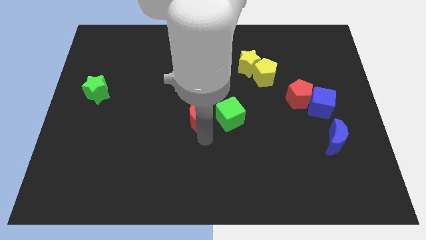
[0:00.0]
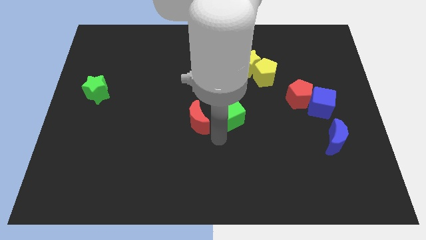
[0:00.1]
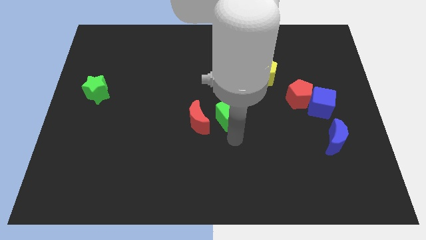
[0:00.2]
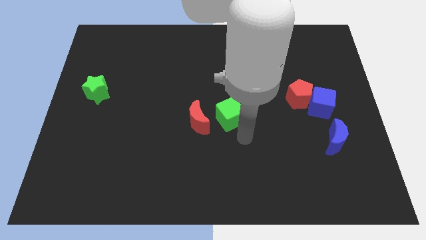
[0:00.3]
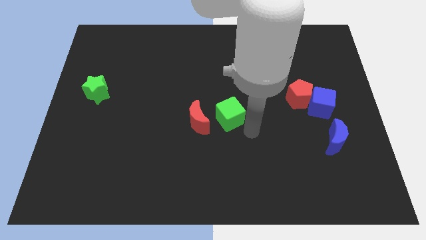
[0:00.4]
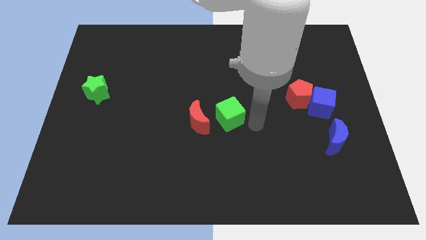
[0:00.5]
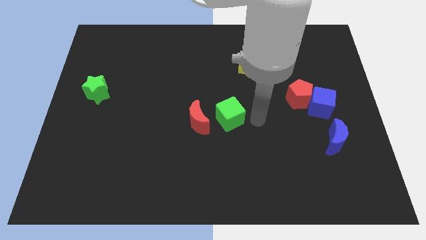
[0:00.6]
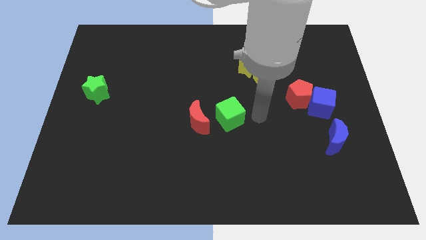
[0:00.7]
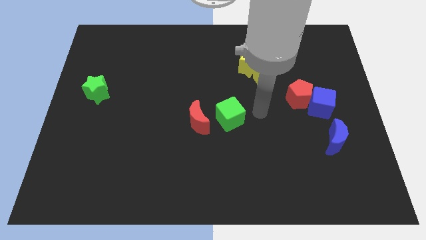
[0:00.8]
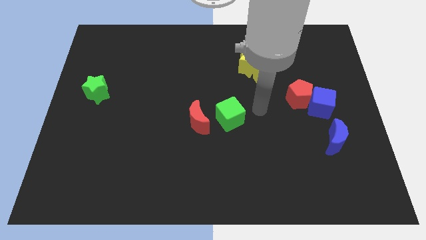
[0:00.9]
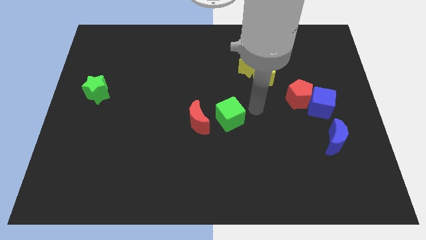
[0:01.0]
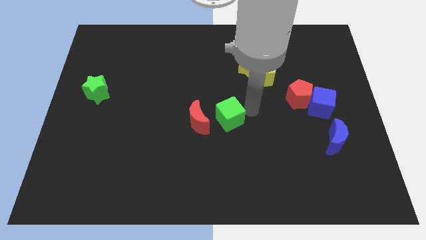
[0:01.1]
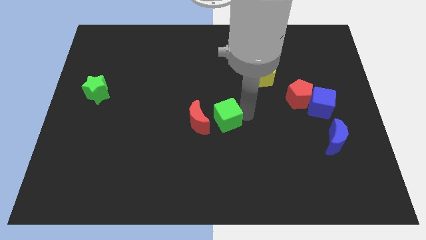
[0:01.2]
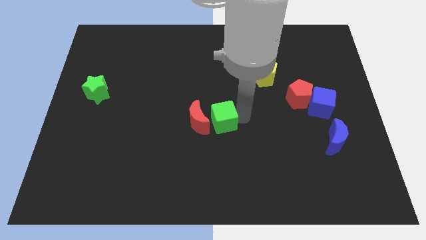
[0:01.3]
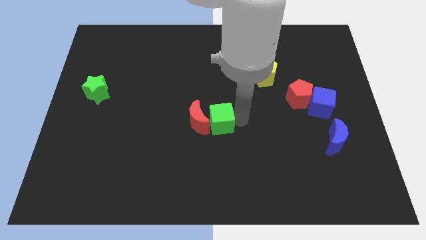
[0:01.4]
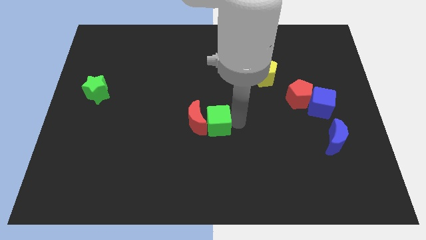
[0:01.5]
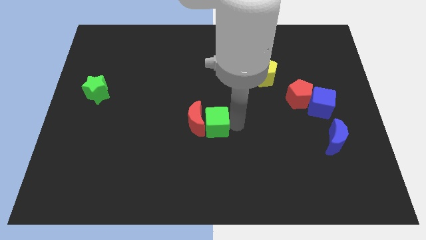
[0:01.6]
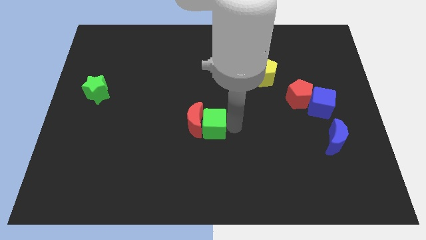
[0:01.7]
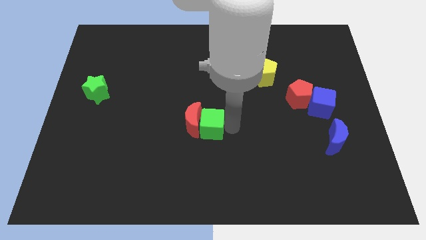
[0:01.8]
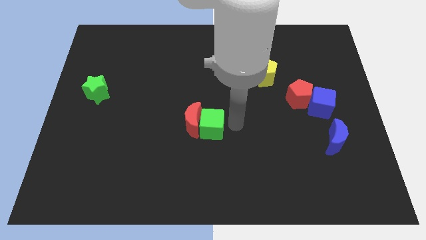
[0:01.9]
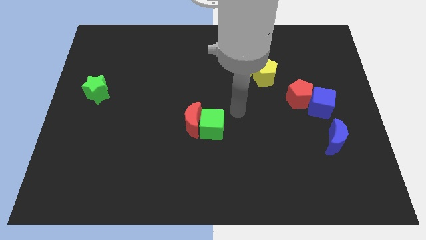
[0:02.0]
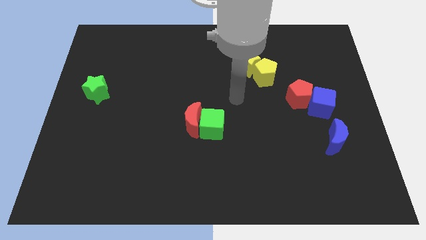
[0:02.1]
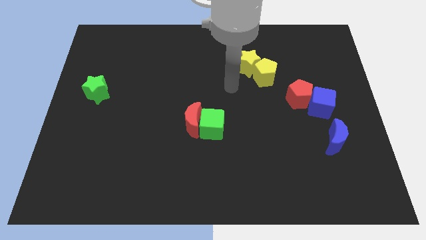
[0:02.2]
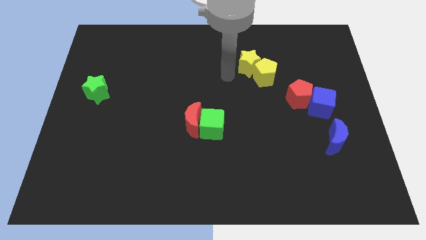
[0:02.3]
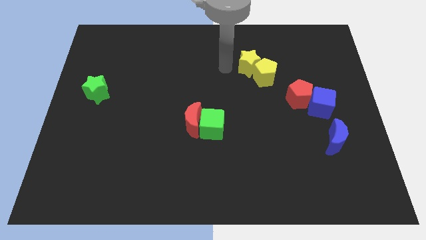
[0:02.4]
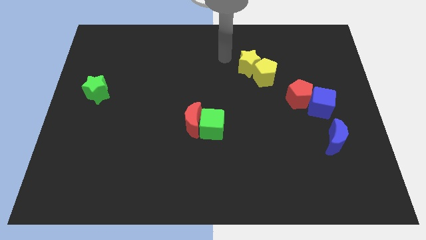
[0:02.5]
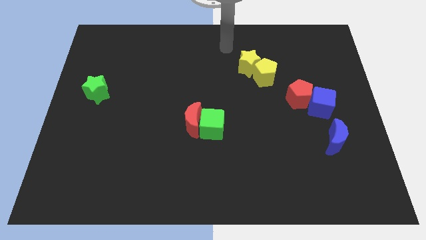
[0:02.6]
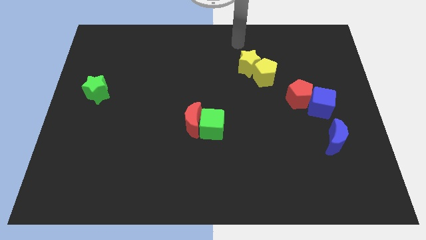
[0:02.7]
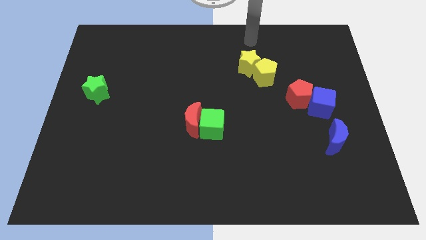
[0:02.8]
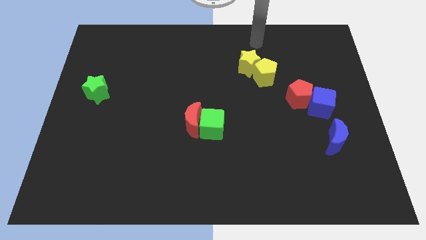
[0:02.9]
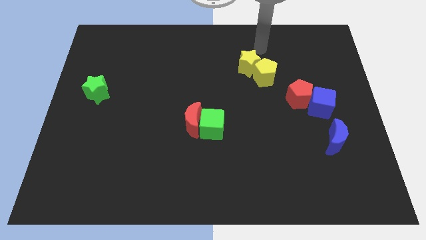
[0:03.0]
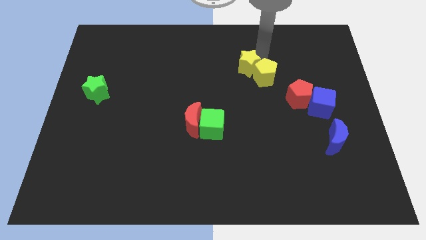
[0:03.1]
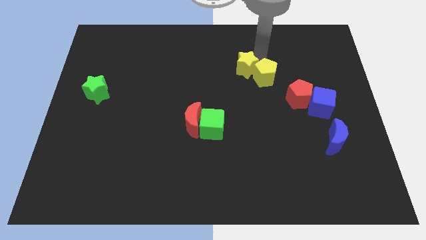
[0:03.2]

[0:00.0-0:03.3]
push green cube closer to the red moon from right side

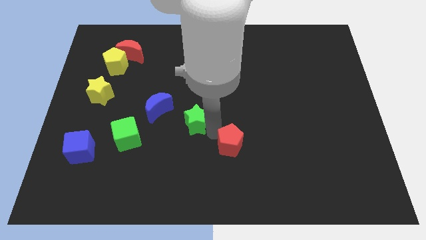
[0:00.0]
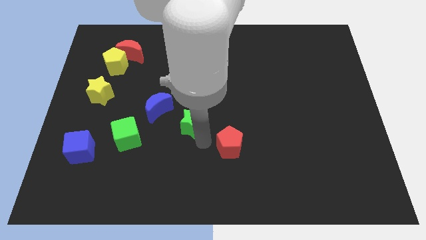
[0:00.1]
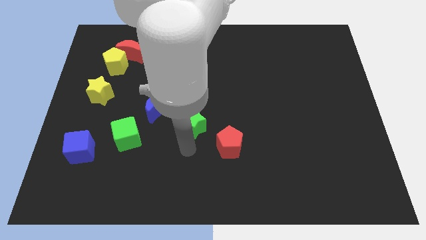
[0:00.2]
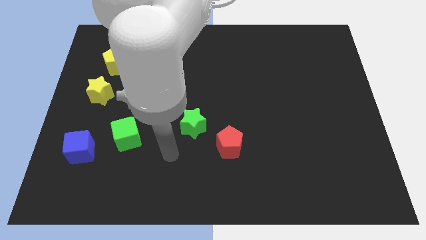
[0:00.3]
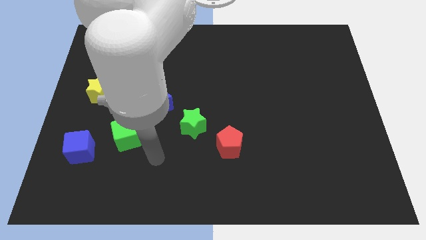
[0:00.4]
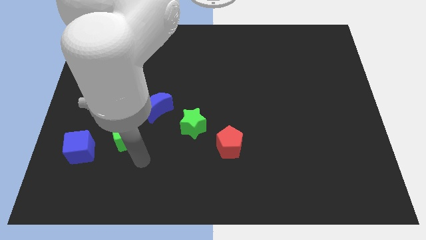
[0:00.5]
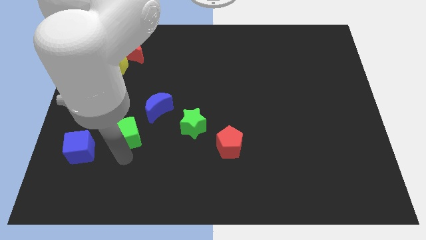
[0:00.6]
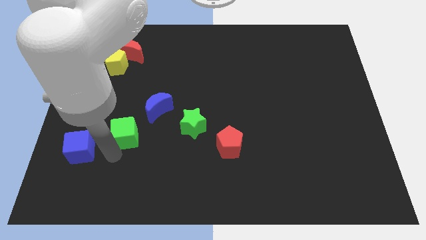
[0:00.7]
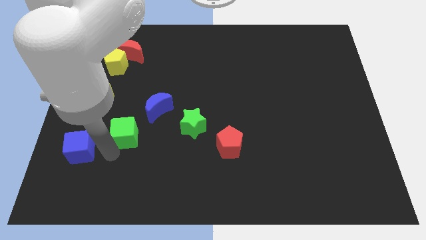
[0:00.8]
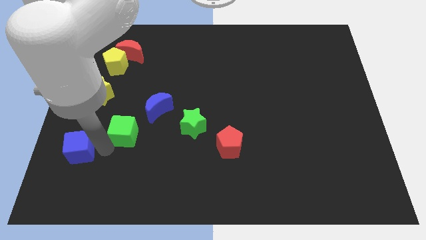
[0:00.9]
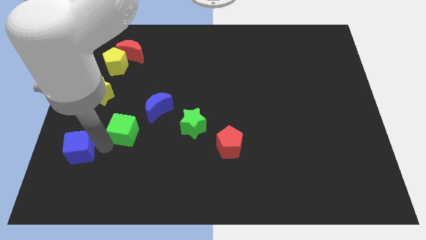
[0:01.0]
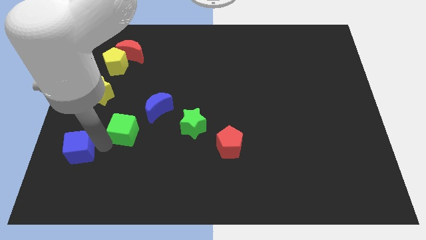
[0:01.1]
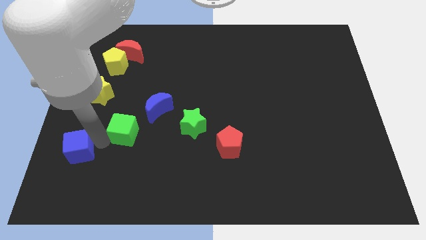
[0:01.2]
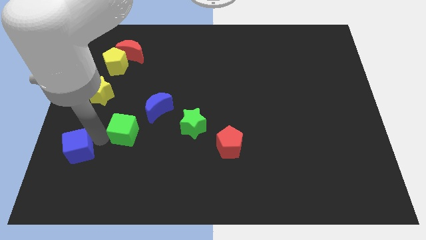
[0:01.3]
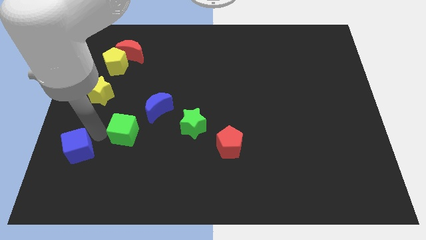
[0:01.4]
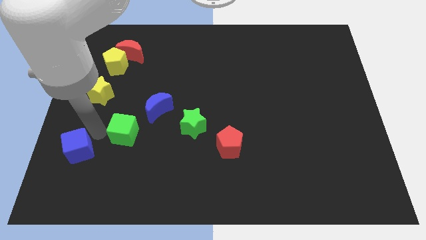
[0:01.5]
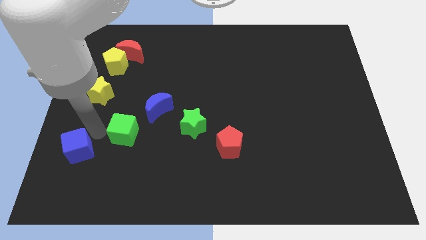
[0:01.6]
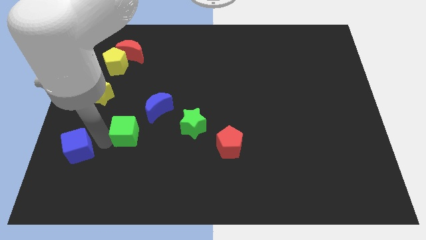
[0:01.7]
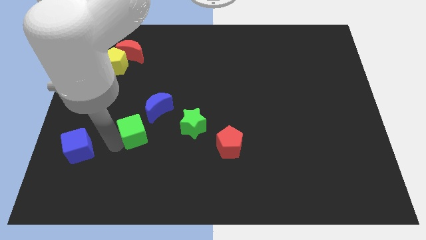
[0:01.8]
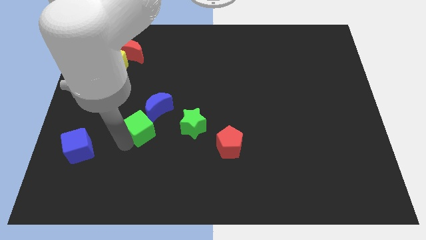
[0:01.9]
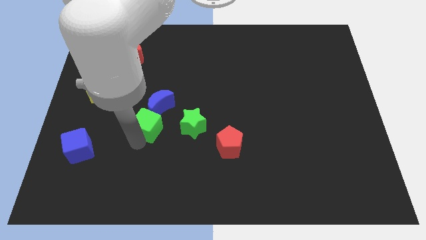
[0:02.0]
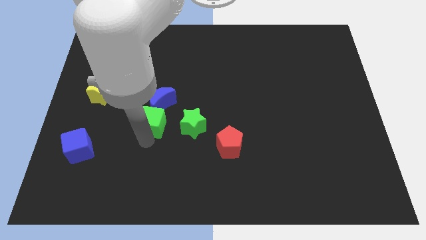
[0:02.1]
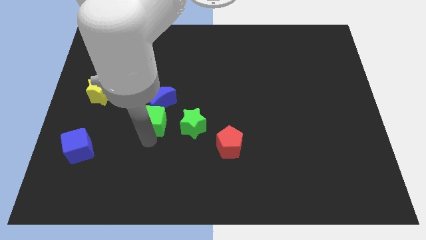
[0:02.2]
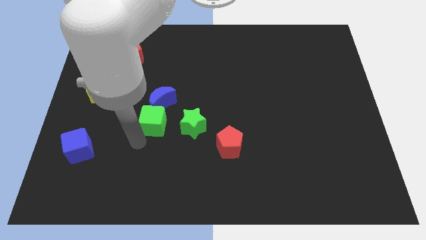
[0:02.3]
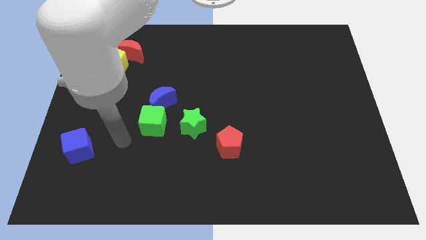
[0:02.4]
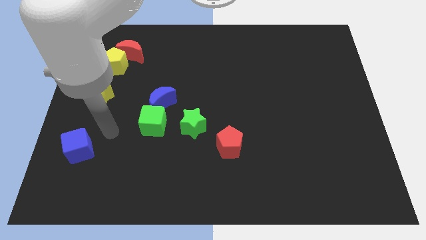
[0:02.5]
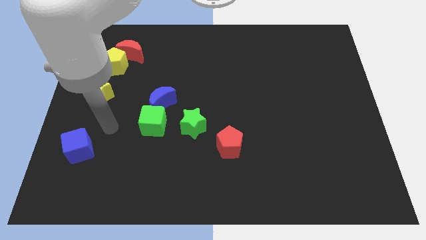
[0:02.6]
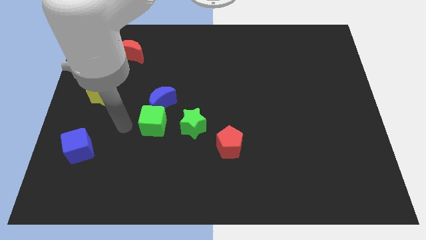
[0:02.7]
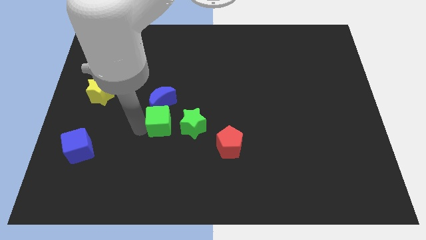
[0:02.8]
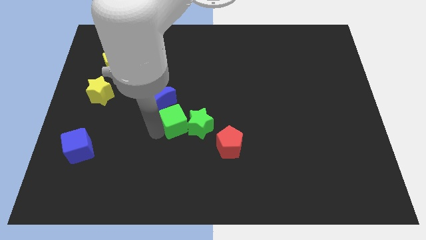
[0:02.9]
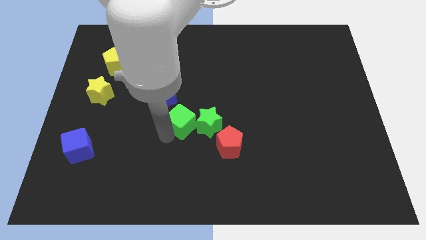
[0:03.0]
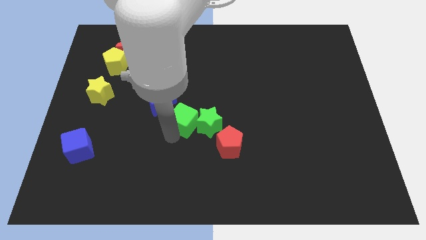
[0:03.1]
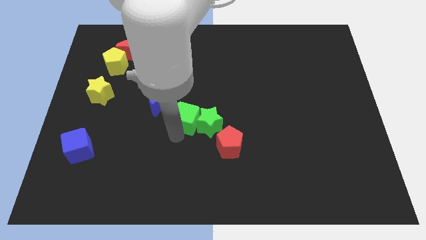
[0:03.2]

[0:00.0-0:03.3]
slide the green cube into the green star

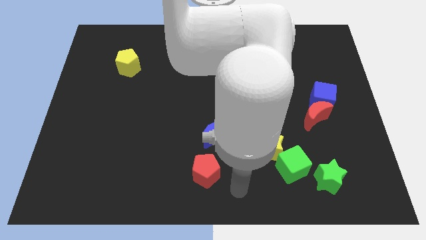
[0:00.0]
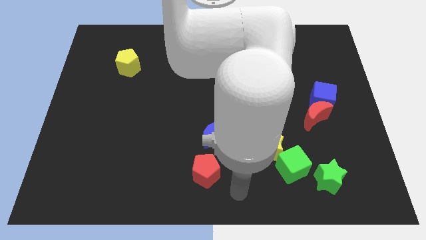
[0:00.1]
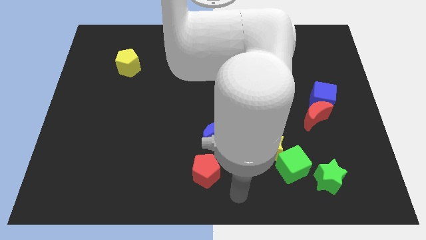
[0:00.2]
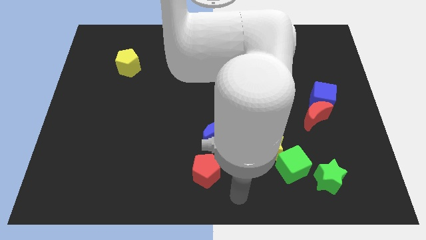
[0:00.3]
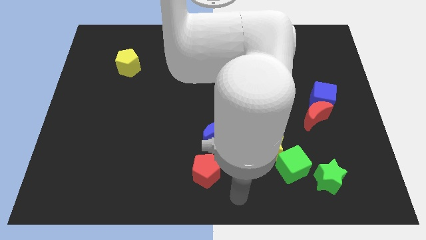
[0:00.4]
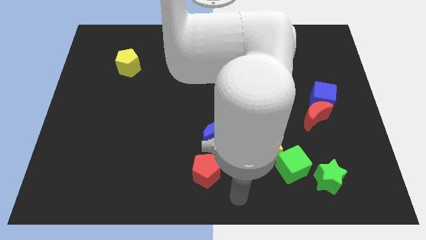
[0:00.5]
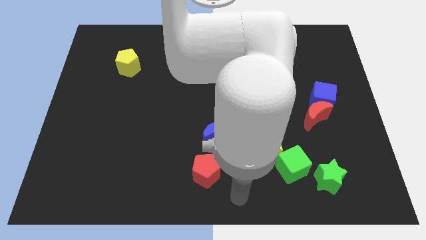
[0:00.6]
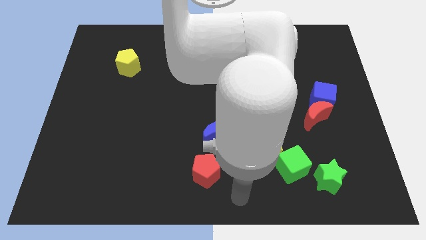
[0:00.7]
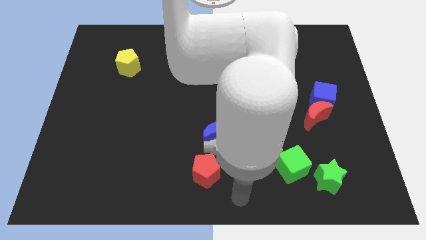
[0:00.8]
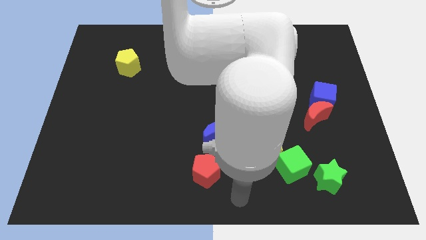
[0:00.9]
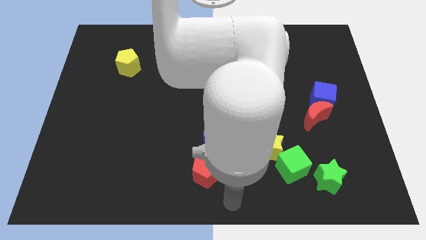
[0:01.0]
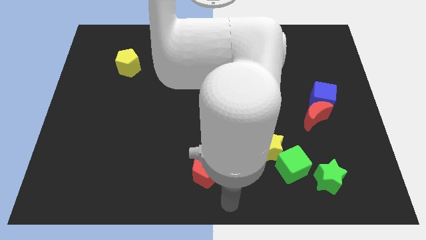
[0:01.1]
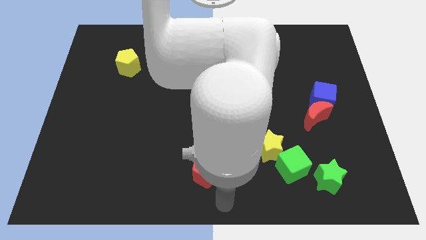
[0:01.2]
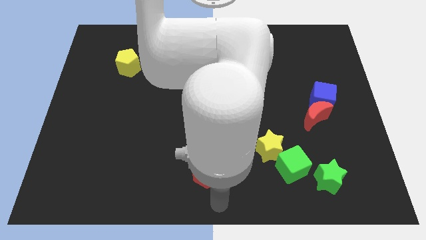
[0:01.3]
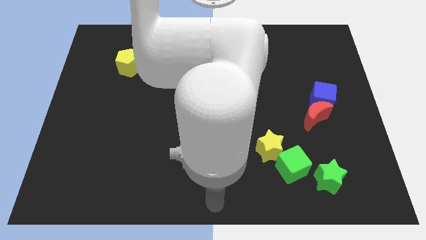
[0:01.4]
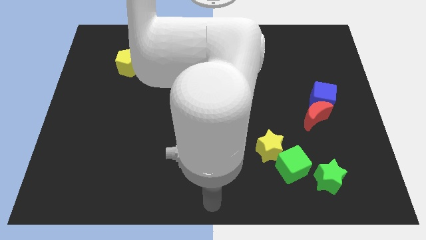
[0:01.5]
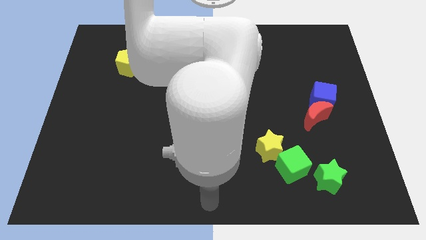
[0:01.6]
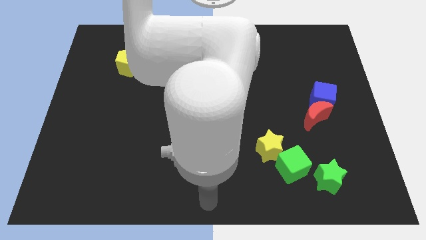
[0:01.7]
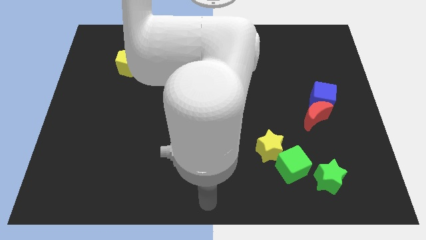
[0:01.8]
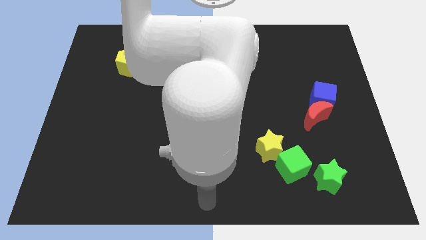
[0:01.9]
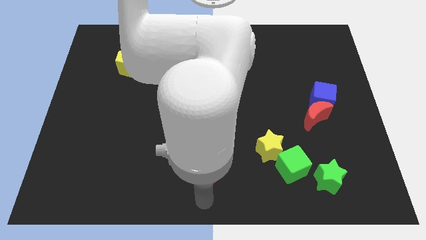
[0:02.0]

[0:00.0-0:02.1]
place your arm below red pentagon

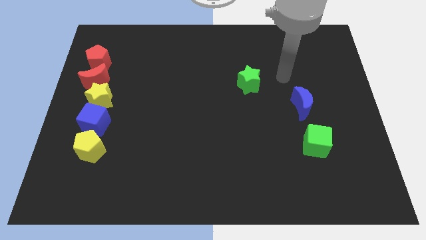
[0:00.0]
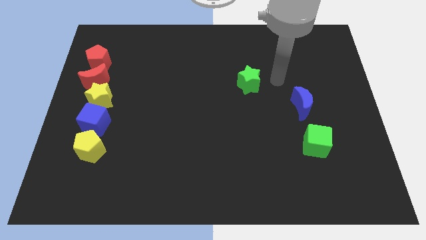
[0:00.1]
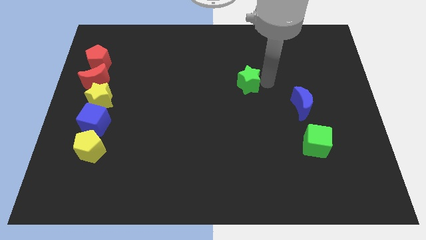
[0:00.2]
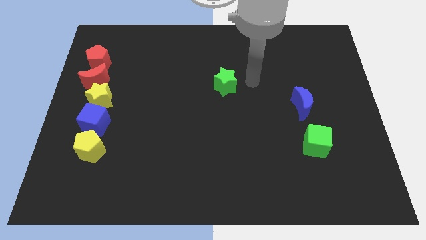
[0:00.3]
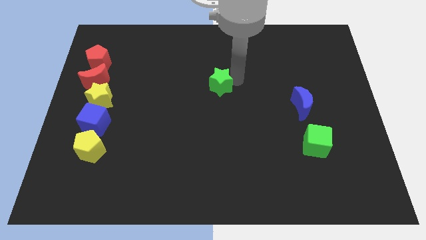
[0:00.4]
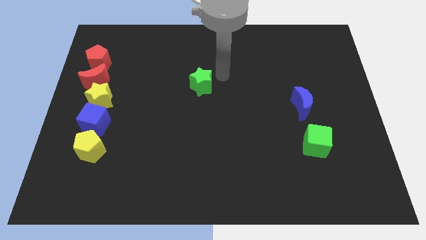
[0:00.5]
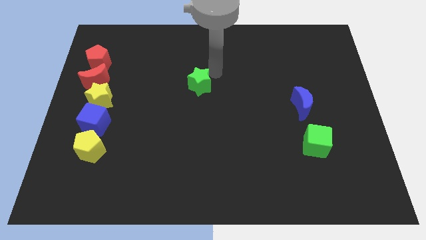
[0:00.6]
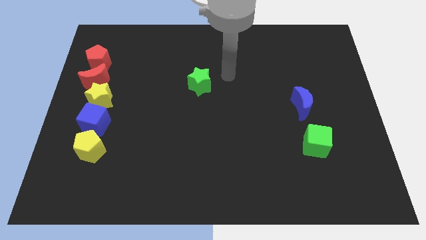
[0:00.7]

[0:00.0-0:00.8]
push the green star to the center of the board
